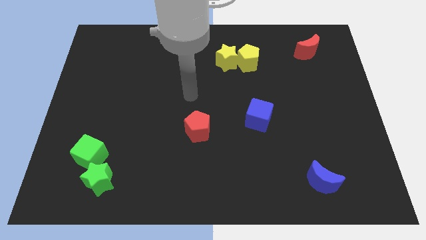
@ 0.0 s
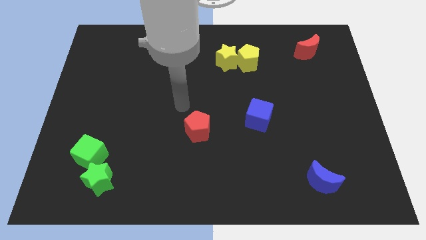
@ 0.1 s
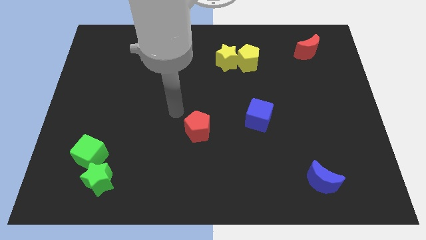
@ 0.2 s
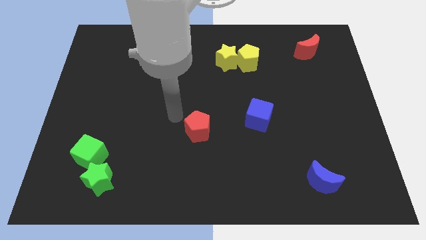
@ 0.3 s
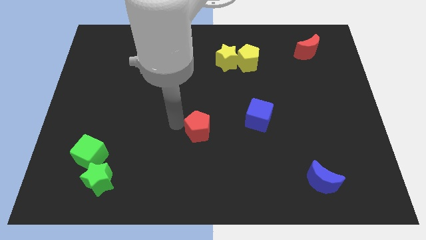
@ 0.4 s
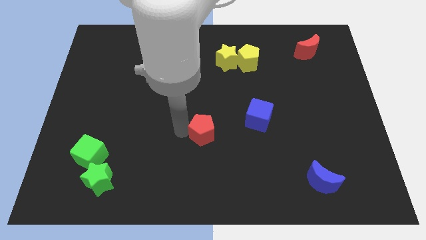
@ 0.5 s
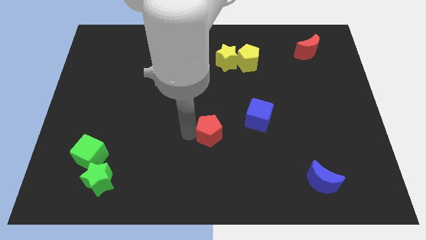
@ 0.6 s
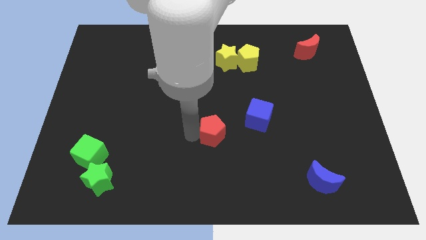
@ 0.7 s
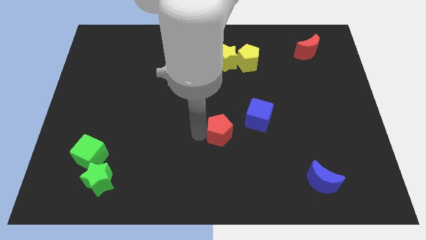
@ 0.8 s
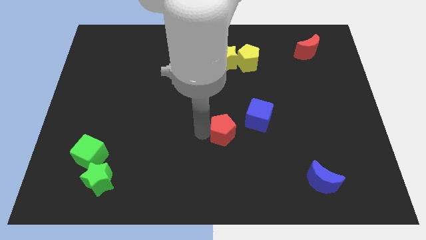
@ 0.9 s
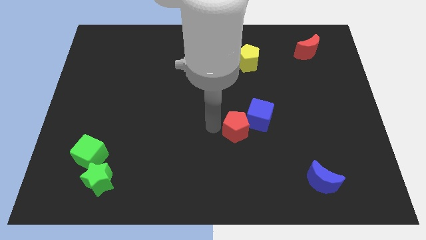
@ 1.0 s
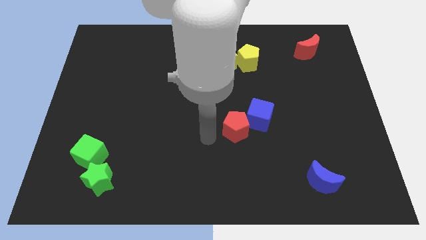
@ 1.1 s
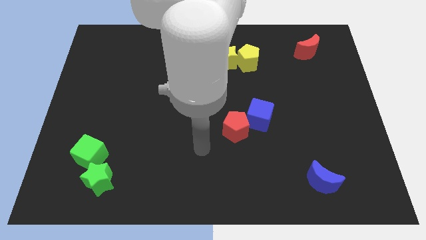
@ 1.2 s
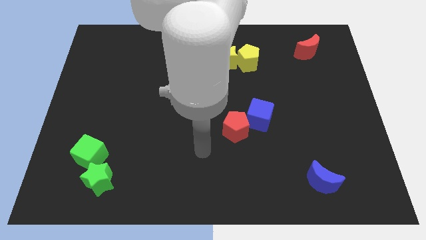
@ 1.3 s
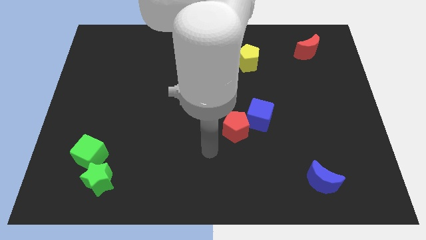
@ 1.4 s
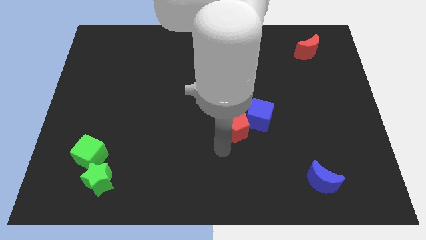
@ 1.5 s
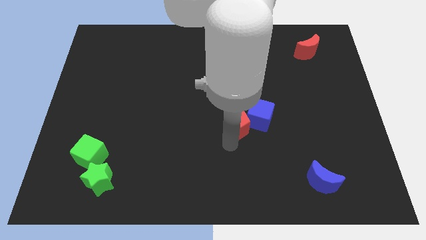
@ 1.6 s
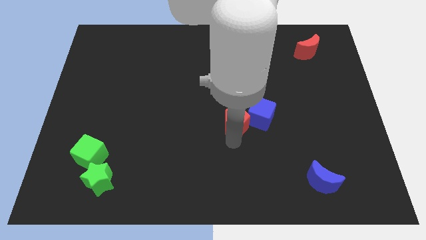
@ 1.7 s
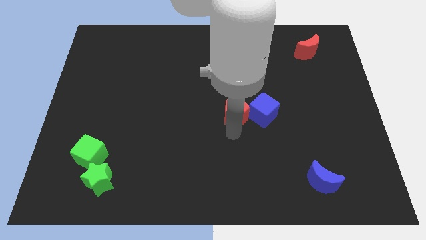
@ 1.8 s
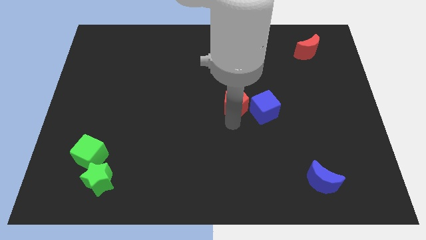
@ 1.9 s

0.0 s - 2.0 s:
slightly moved the red pentagon near to blue cube

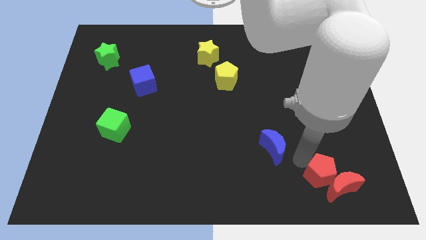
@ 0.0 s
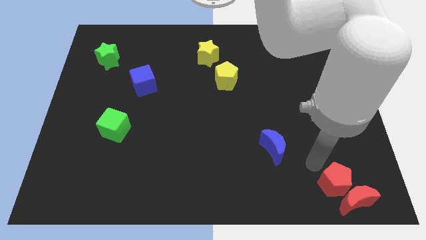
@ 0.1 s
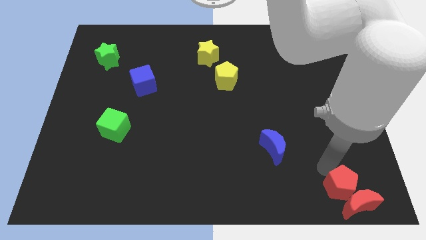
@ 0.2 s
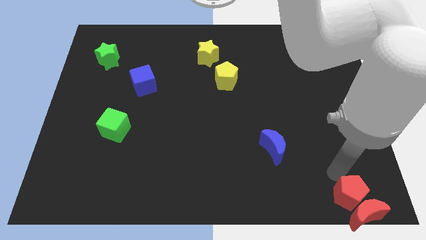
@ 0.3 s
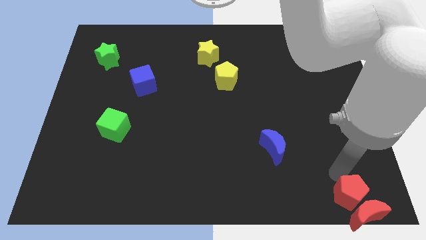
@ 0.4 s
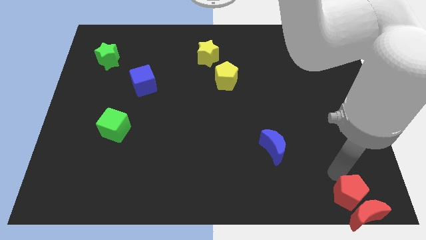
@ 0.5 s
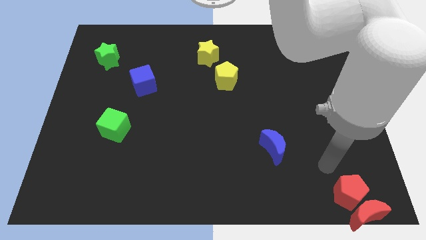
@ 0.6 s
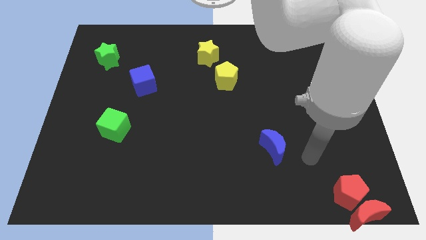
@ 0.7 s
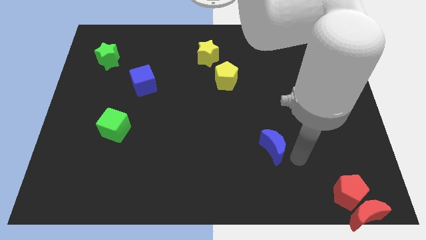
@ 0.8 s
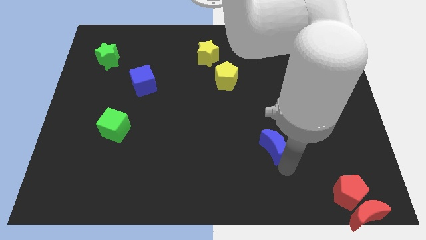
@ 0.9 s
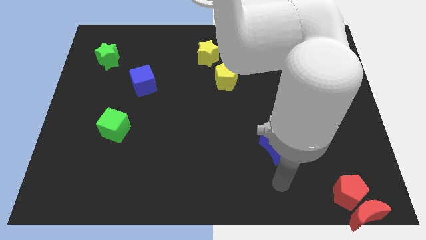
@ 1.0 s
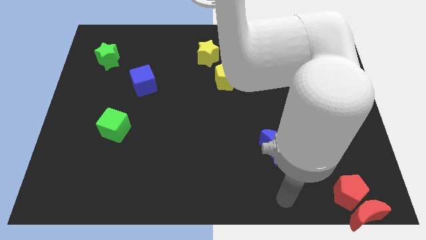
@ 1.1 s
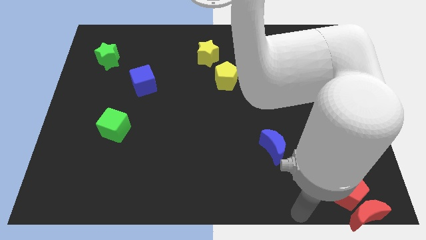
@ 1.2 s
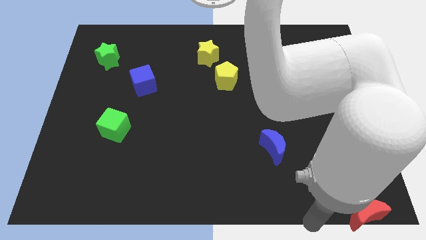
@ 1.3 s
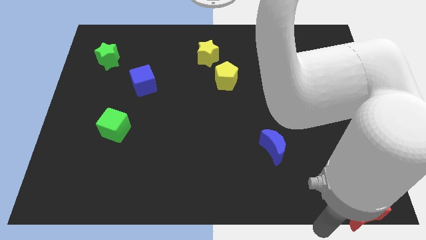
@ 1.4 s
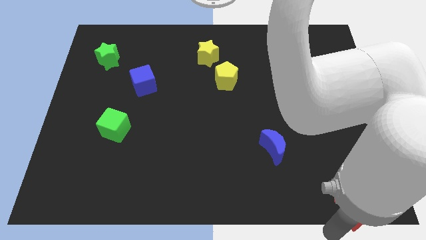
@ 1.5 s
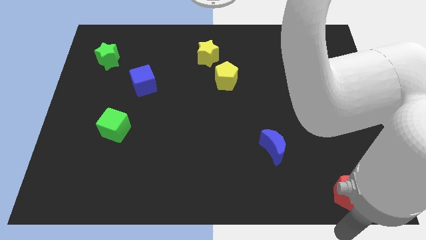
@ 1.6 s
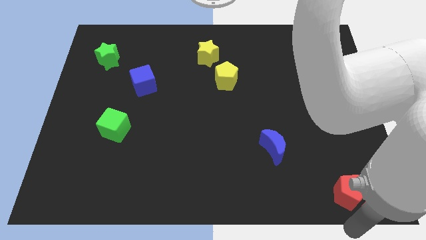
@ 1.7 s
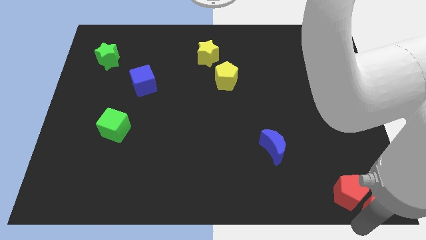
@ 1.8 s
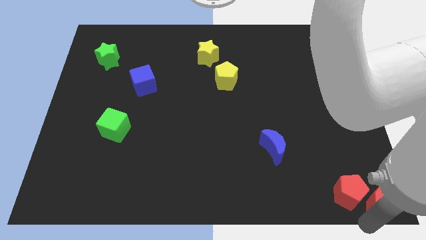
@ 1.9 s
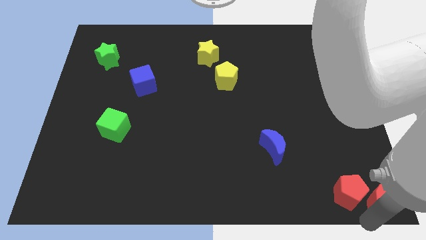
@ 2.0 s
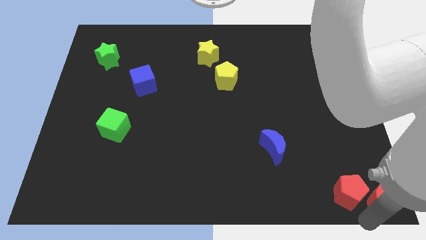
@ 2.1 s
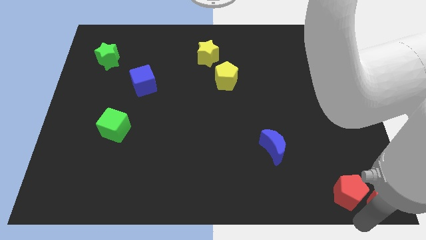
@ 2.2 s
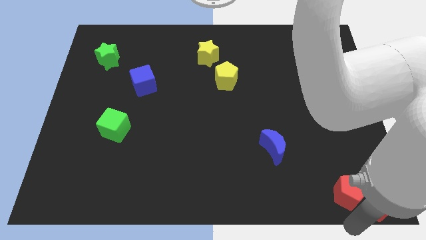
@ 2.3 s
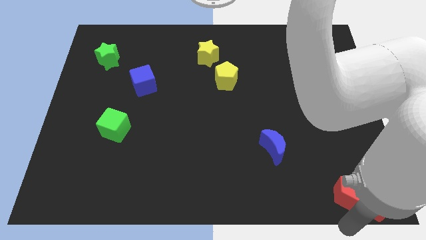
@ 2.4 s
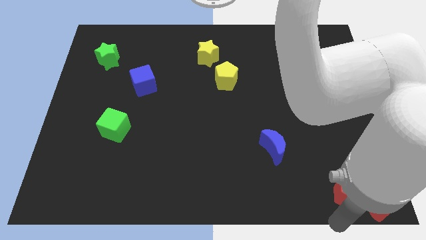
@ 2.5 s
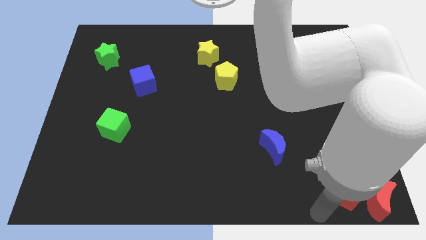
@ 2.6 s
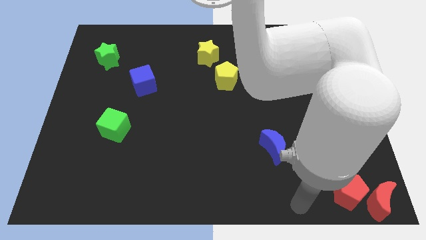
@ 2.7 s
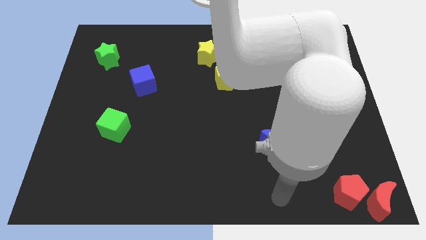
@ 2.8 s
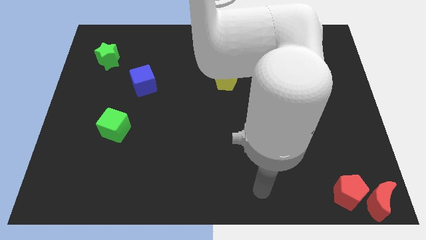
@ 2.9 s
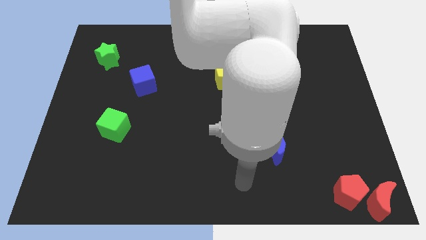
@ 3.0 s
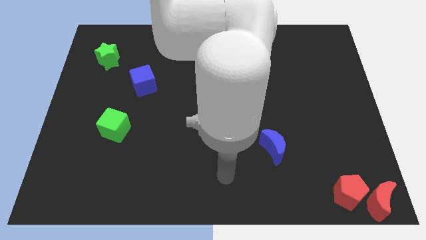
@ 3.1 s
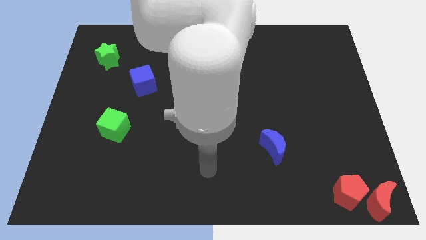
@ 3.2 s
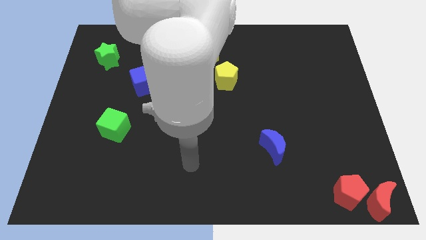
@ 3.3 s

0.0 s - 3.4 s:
push the red blocks to the bottom right corner

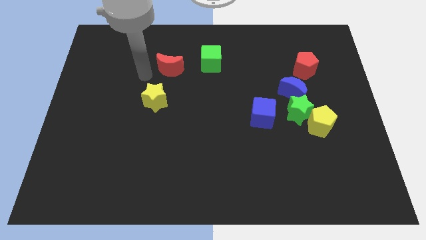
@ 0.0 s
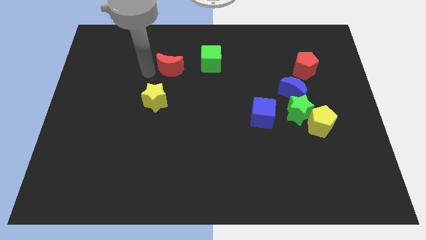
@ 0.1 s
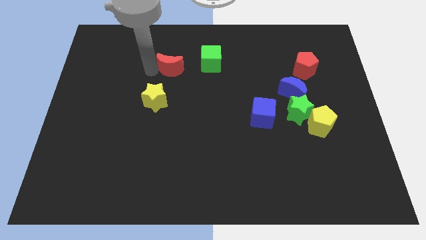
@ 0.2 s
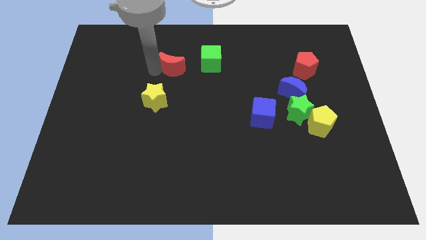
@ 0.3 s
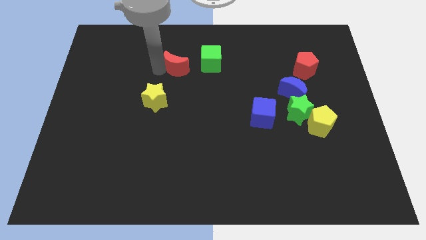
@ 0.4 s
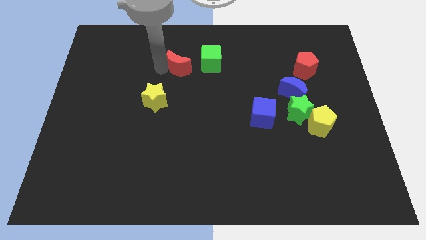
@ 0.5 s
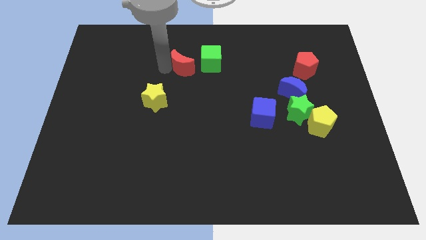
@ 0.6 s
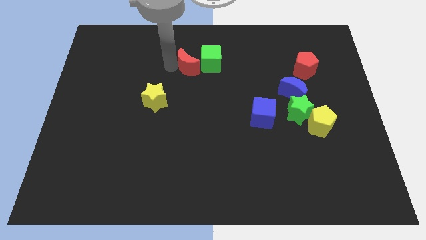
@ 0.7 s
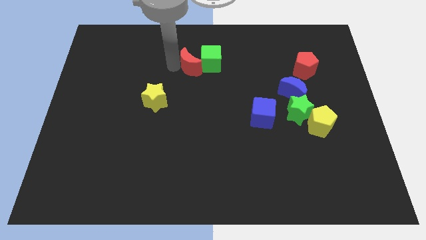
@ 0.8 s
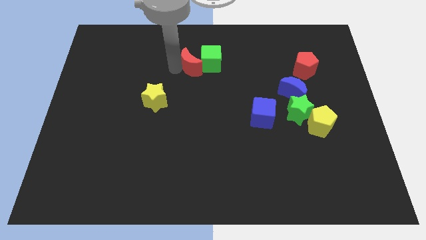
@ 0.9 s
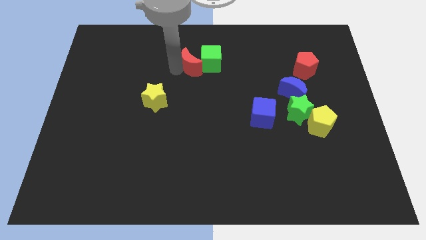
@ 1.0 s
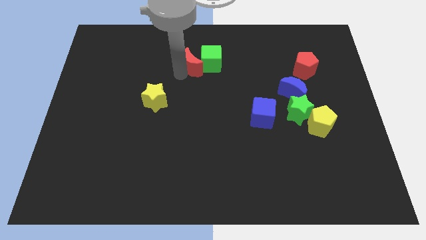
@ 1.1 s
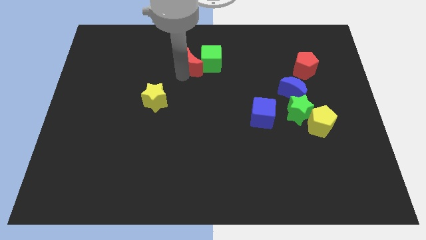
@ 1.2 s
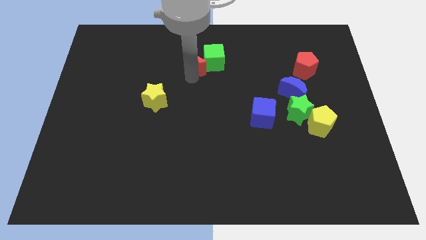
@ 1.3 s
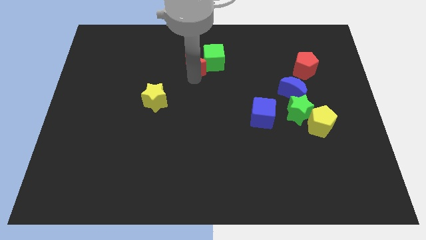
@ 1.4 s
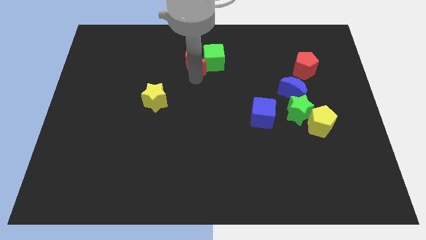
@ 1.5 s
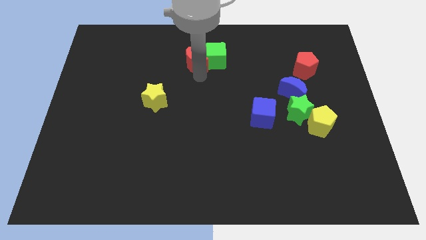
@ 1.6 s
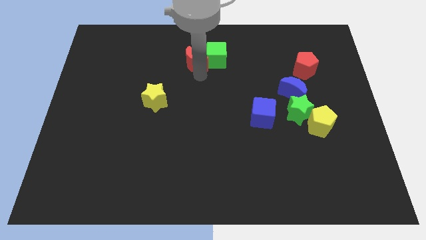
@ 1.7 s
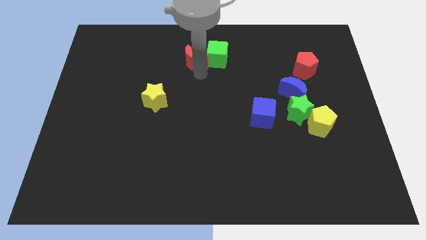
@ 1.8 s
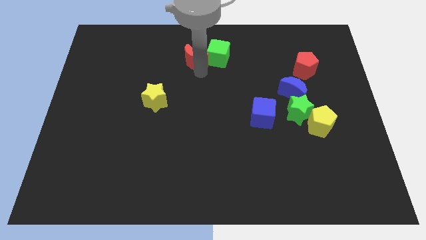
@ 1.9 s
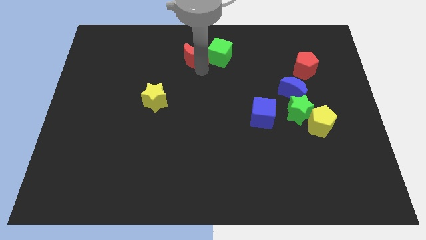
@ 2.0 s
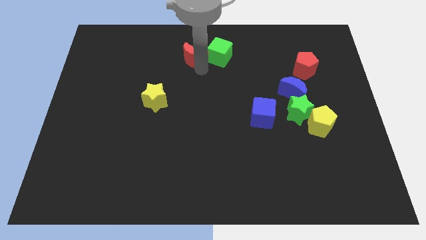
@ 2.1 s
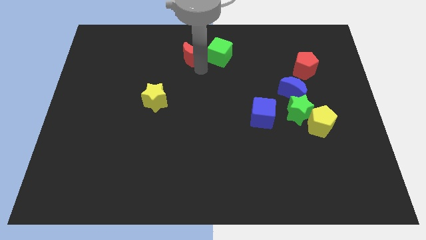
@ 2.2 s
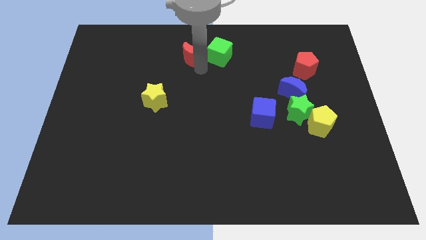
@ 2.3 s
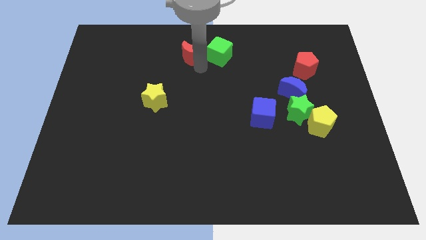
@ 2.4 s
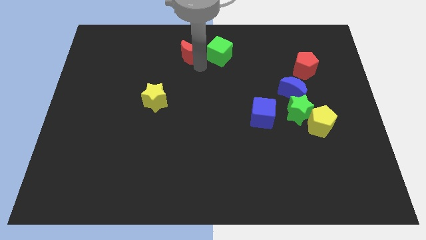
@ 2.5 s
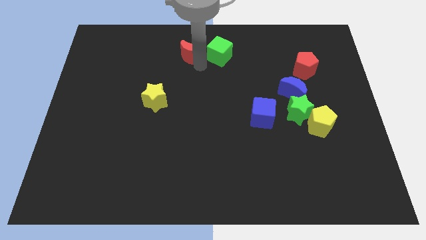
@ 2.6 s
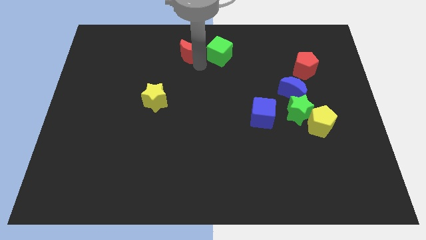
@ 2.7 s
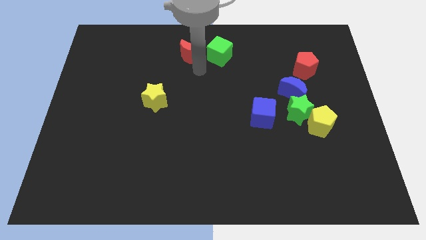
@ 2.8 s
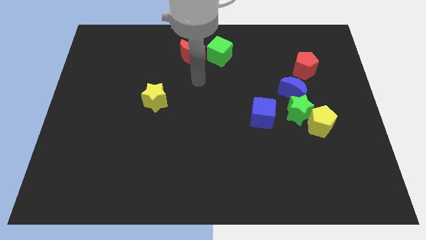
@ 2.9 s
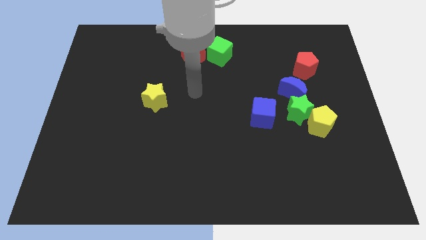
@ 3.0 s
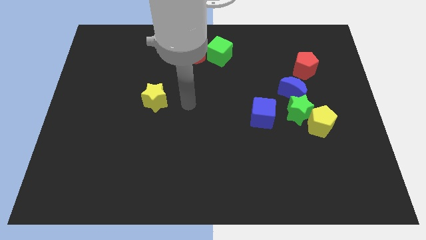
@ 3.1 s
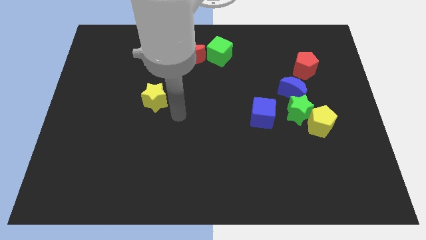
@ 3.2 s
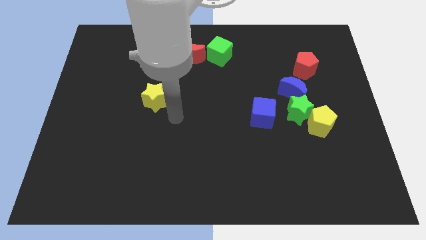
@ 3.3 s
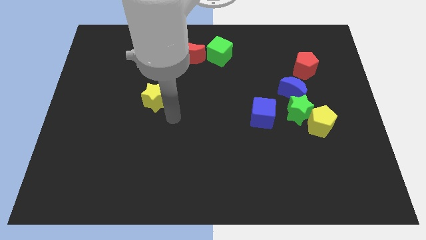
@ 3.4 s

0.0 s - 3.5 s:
place the green cube and red crescent to the top center of the board
